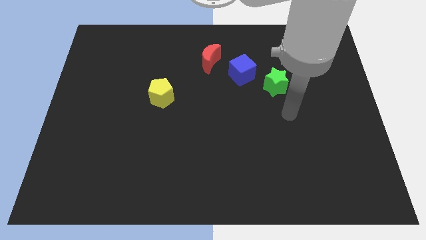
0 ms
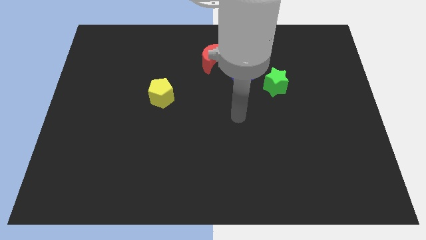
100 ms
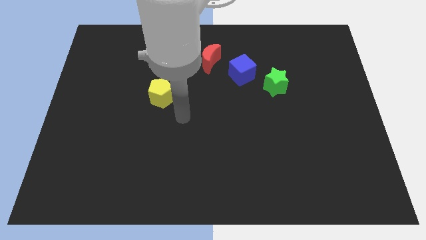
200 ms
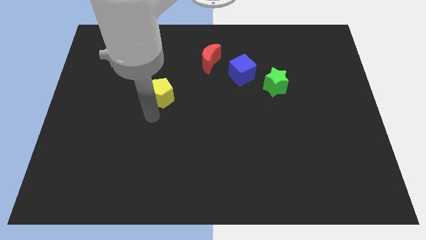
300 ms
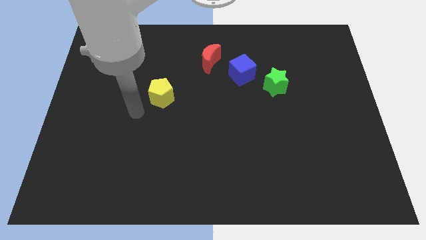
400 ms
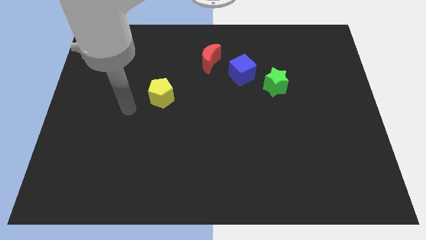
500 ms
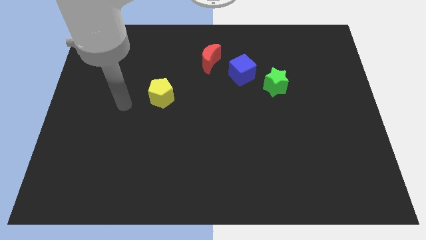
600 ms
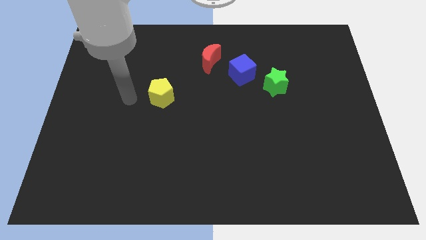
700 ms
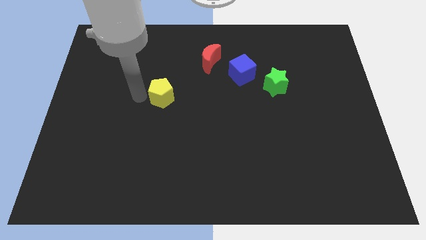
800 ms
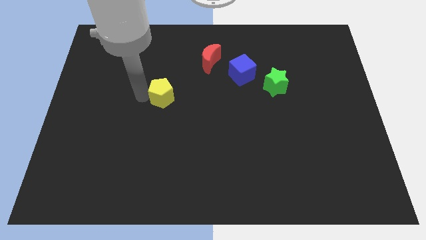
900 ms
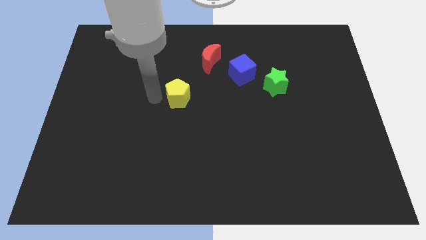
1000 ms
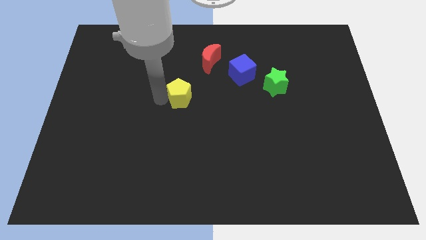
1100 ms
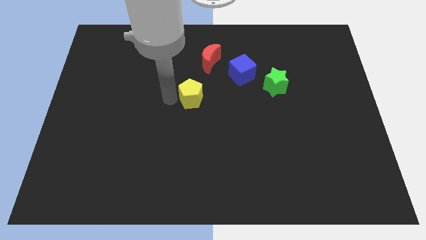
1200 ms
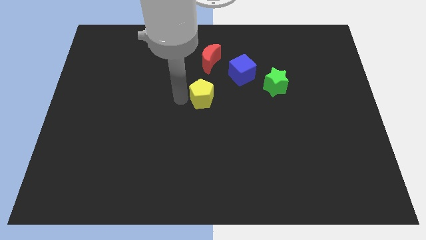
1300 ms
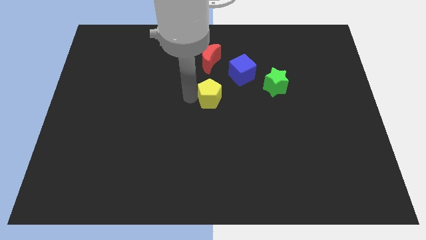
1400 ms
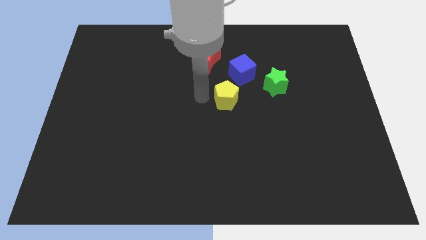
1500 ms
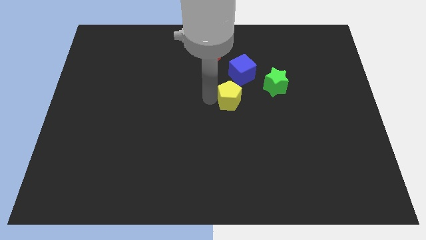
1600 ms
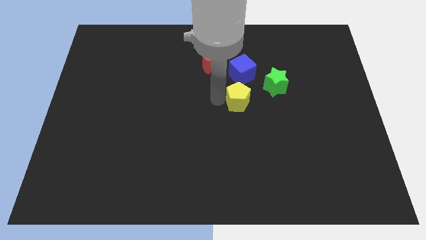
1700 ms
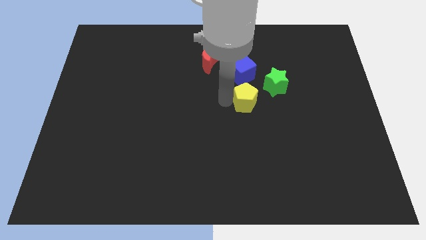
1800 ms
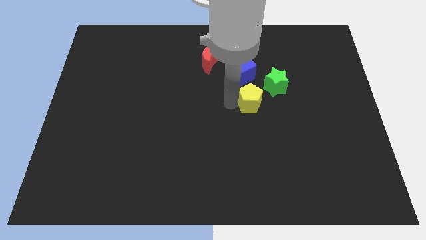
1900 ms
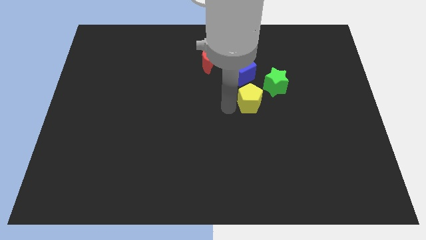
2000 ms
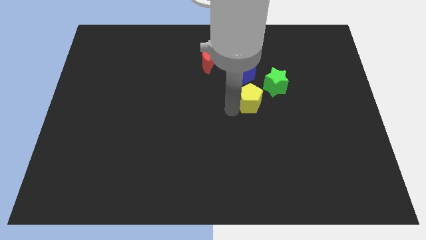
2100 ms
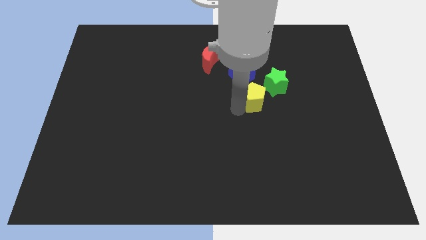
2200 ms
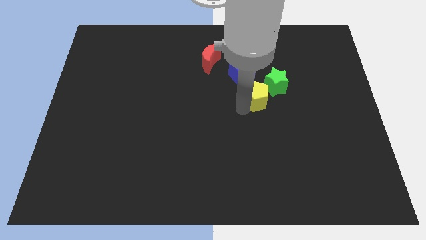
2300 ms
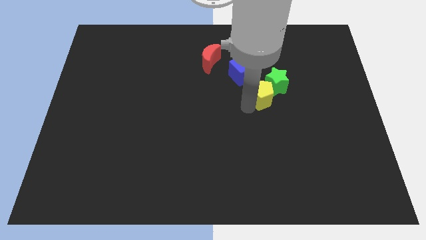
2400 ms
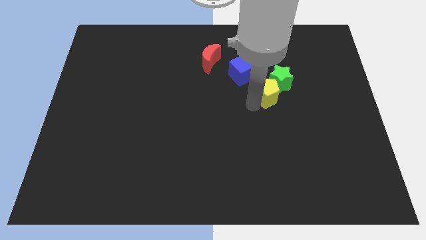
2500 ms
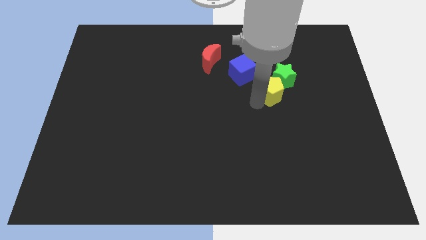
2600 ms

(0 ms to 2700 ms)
push the yellow block close to the green block

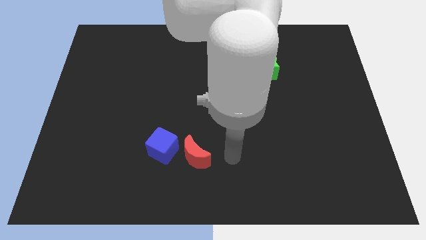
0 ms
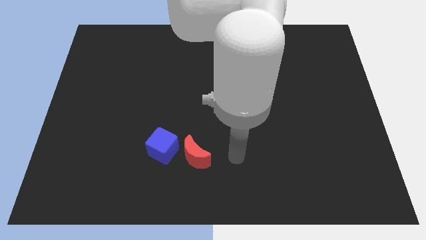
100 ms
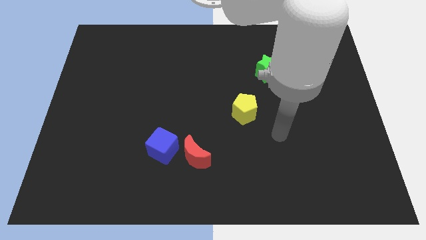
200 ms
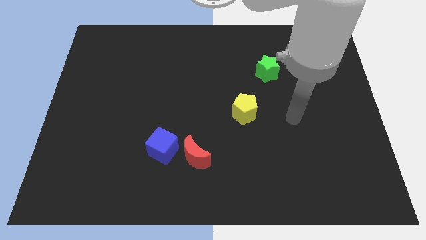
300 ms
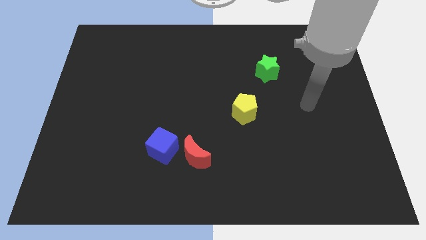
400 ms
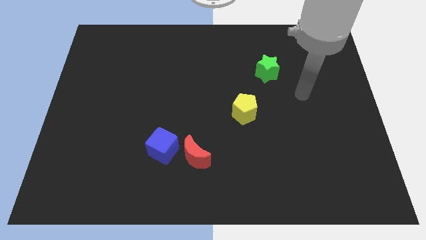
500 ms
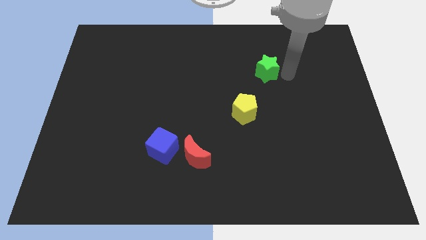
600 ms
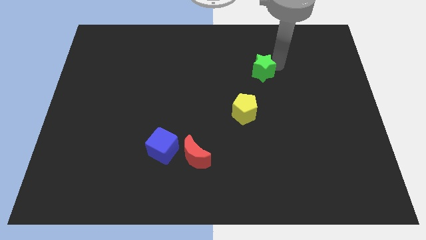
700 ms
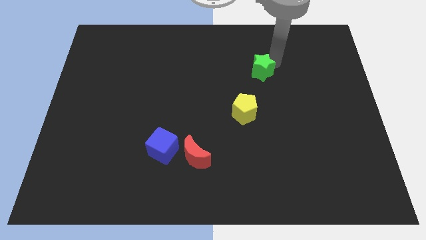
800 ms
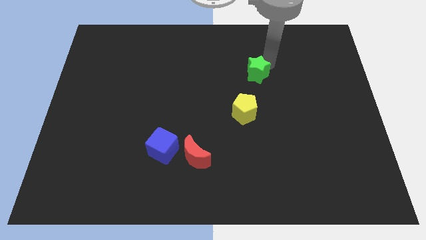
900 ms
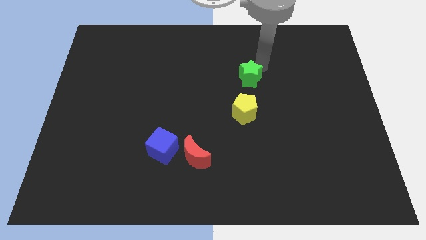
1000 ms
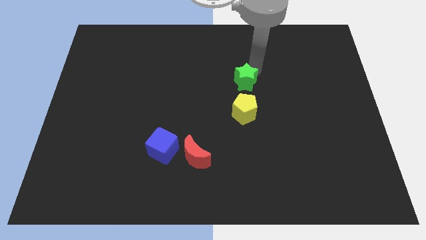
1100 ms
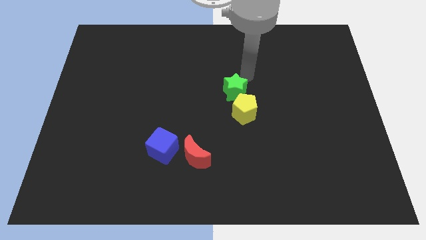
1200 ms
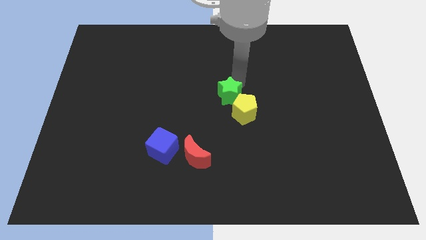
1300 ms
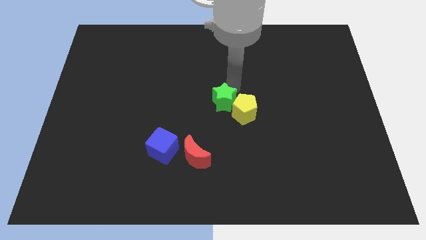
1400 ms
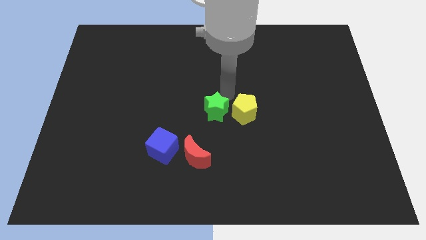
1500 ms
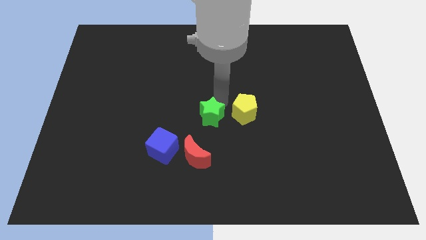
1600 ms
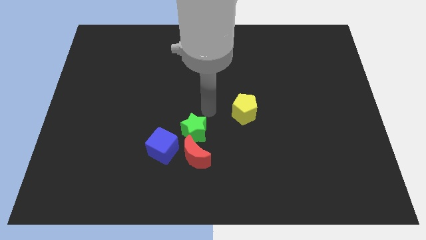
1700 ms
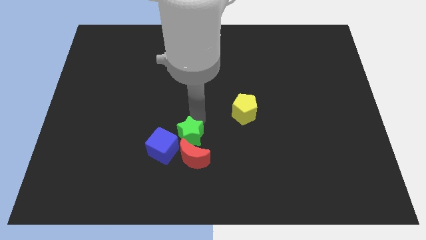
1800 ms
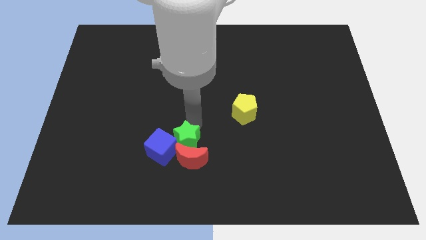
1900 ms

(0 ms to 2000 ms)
push the green star to the red moon

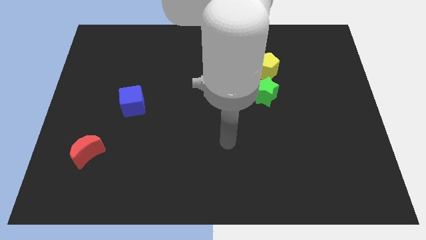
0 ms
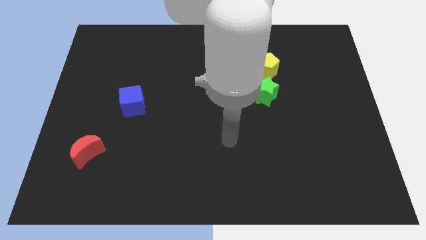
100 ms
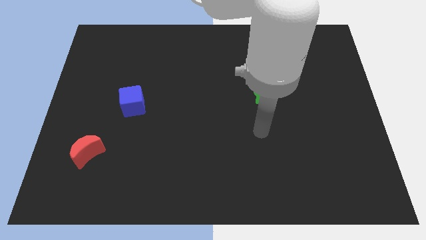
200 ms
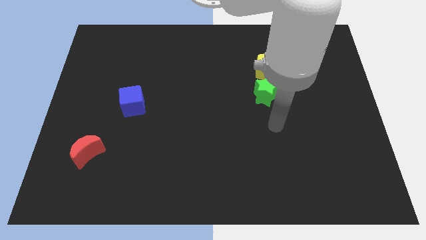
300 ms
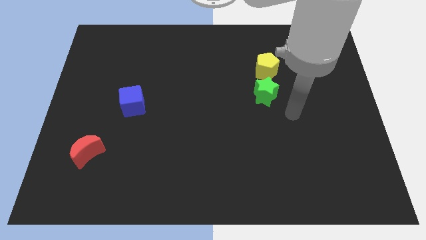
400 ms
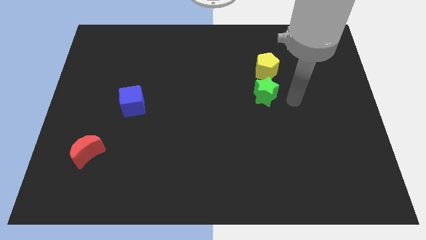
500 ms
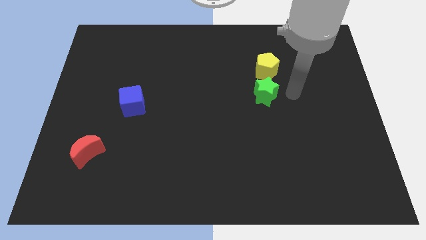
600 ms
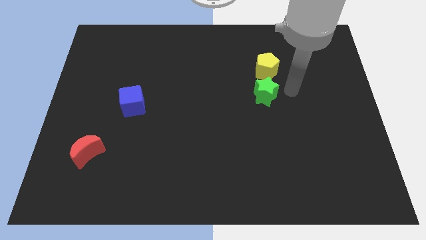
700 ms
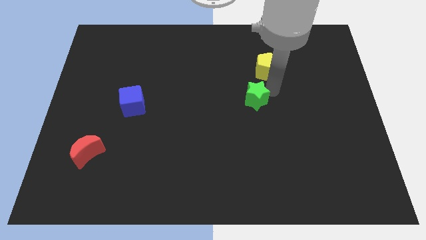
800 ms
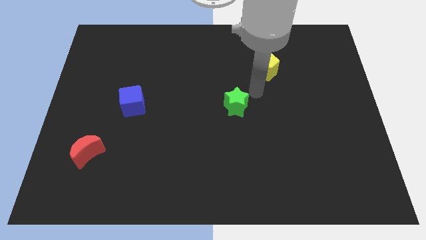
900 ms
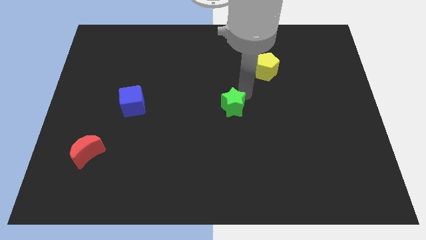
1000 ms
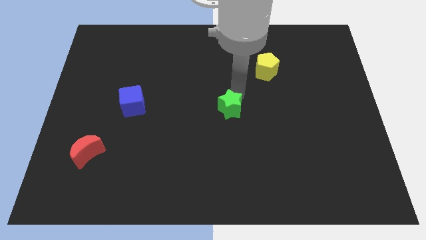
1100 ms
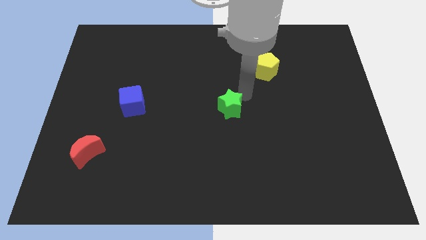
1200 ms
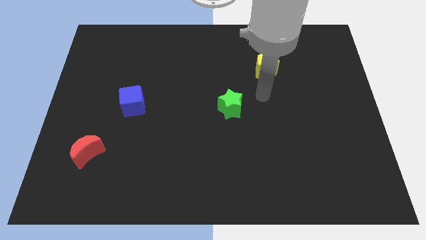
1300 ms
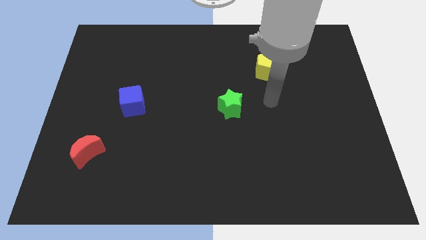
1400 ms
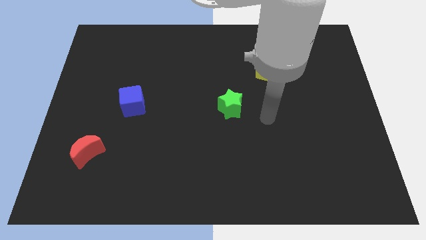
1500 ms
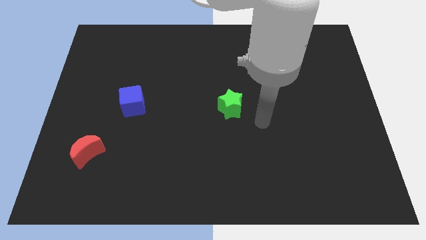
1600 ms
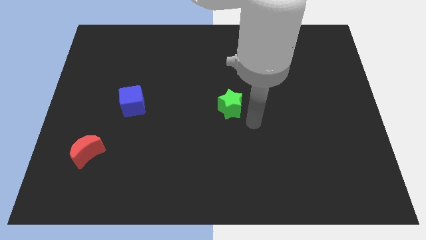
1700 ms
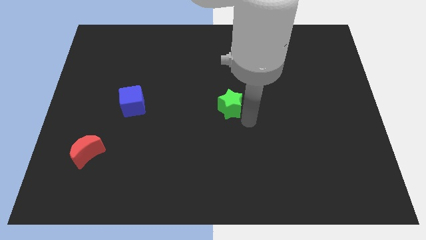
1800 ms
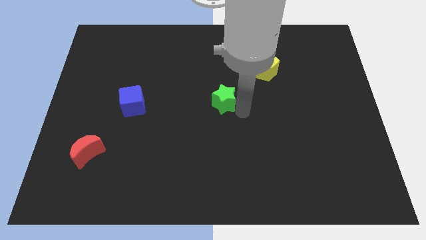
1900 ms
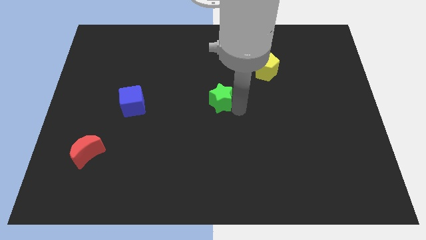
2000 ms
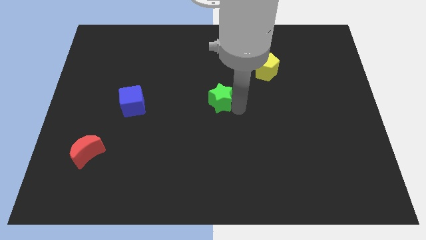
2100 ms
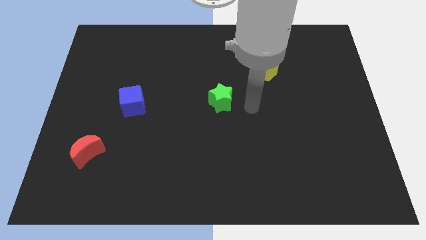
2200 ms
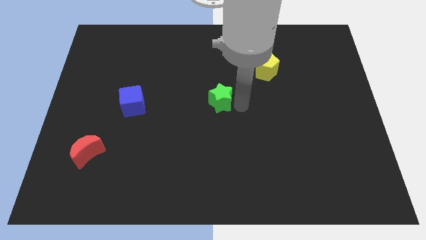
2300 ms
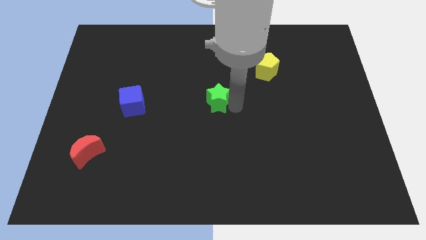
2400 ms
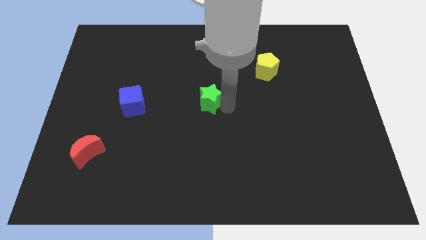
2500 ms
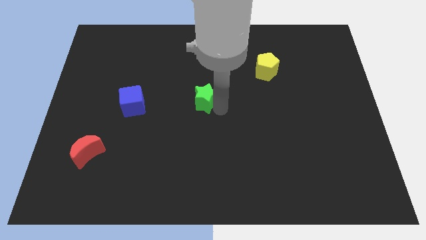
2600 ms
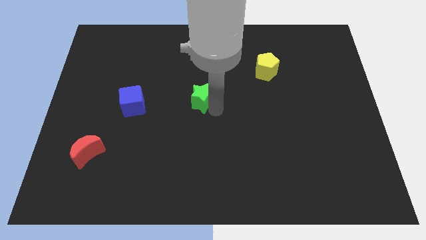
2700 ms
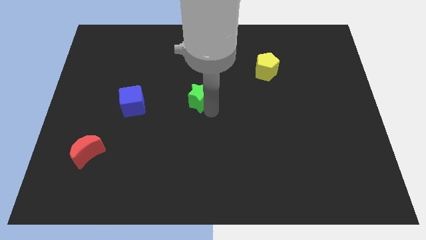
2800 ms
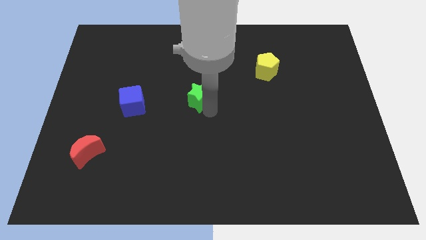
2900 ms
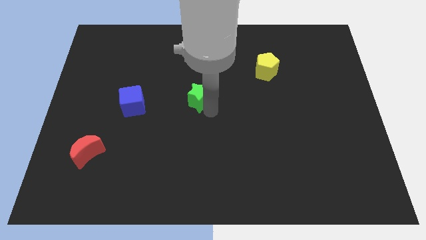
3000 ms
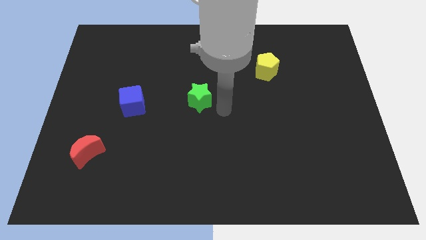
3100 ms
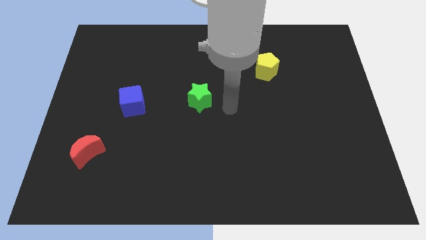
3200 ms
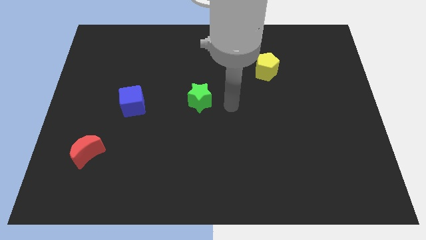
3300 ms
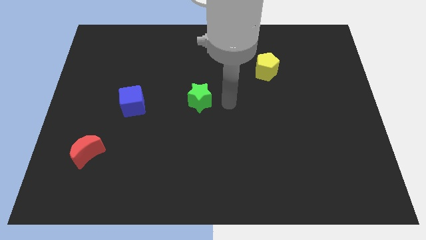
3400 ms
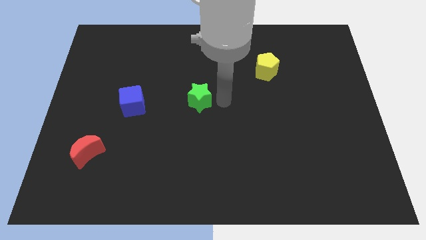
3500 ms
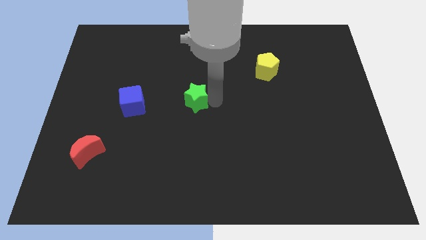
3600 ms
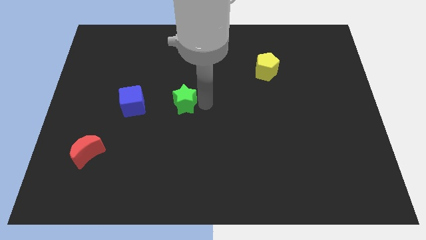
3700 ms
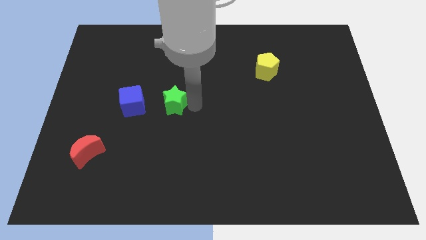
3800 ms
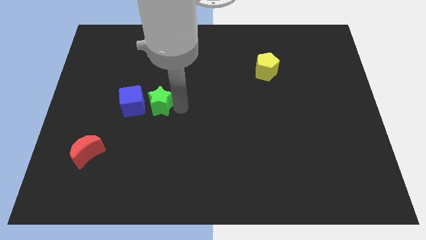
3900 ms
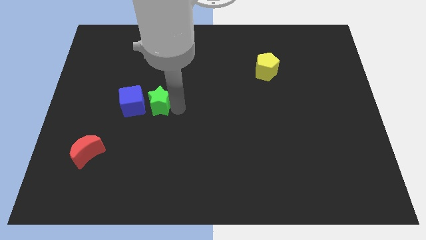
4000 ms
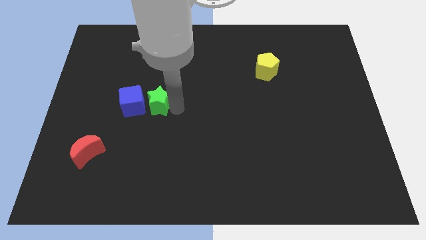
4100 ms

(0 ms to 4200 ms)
push the star to the blue cube
